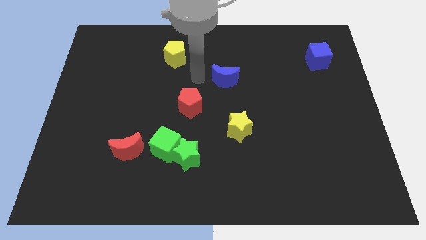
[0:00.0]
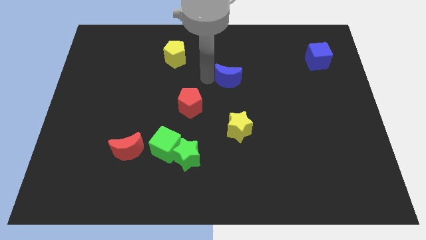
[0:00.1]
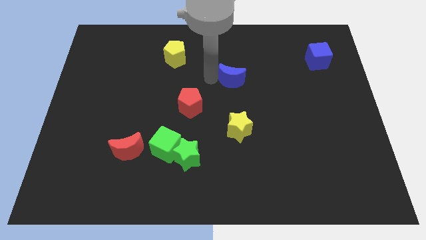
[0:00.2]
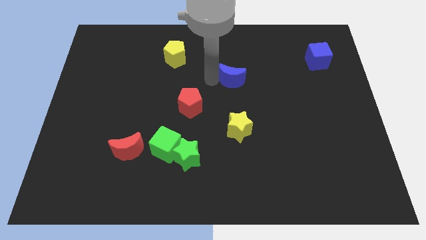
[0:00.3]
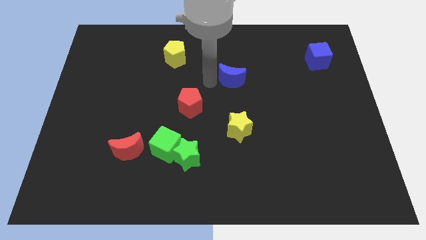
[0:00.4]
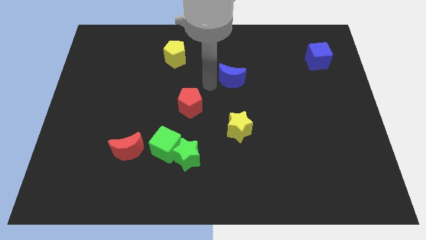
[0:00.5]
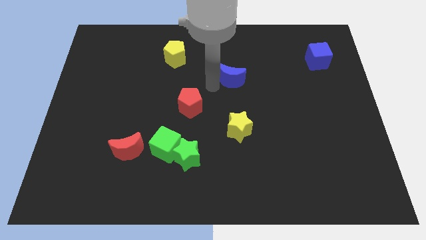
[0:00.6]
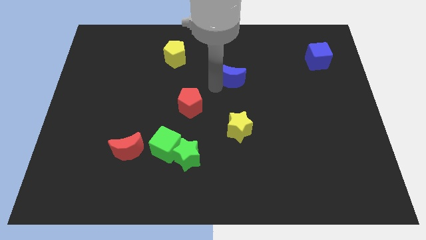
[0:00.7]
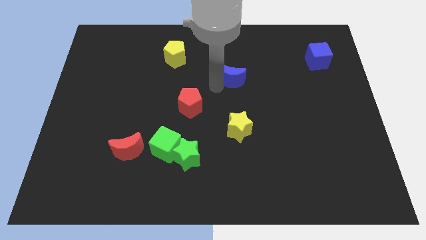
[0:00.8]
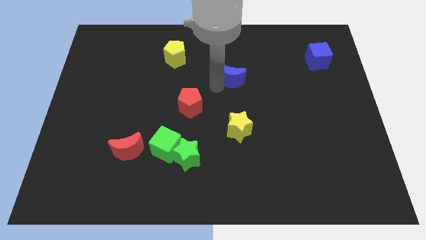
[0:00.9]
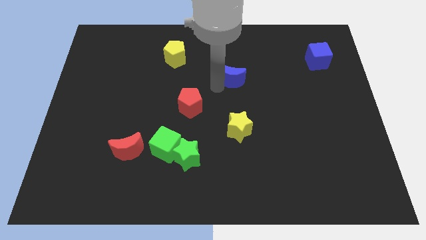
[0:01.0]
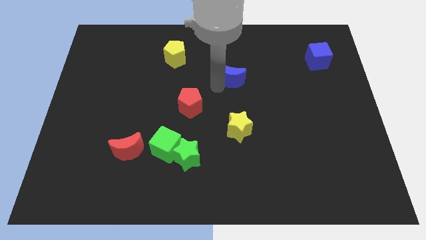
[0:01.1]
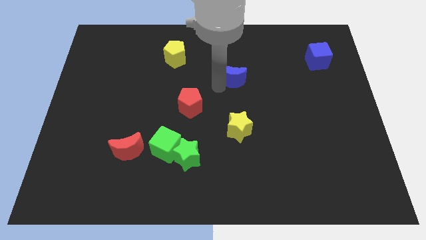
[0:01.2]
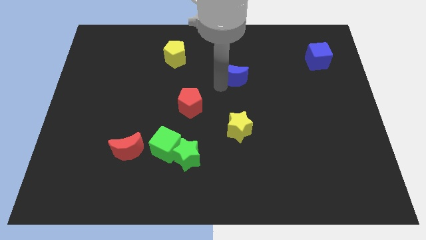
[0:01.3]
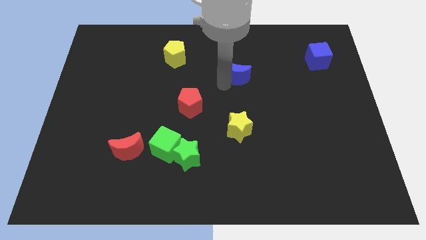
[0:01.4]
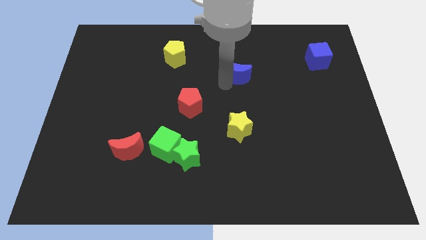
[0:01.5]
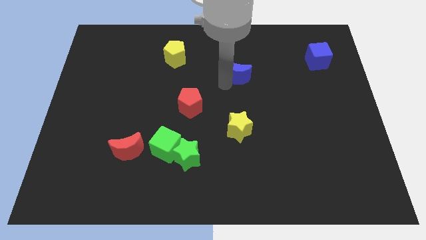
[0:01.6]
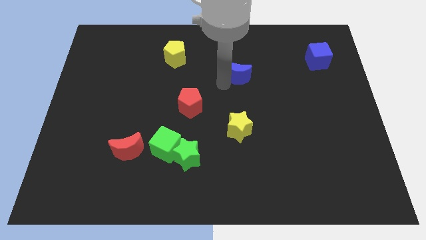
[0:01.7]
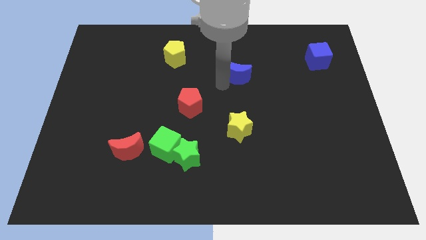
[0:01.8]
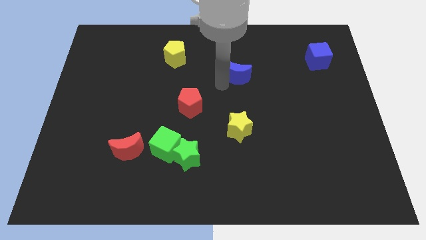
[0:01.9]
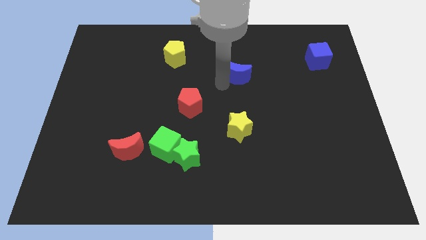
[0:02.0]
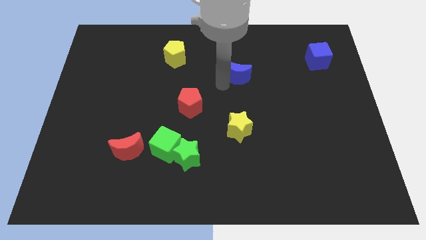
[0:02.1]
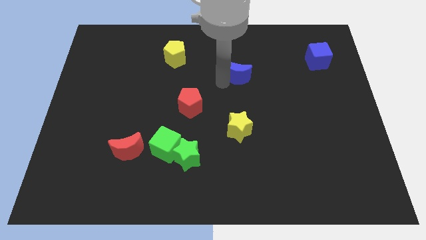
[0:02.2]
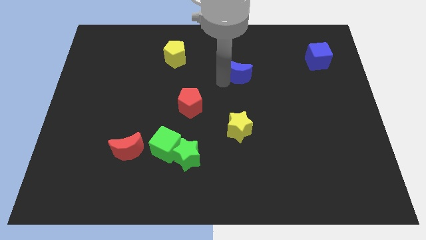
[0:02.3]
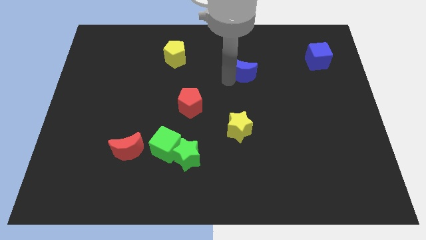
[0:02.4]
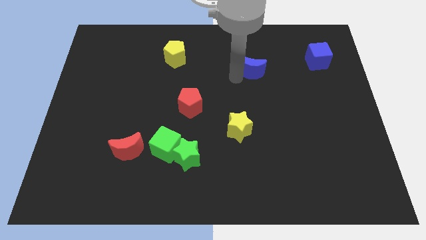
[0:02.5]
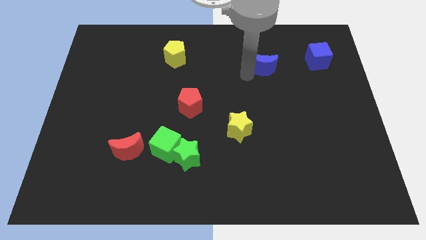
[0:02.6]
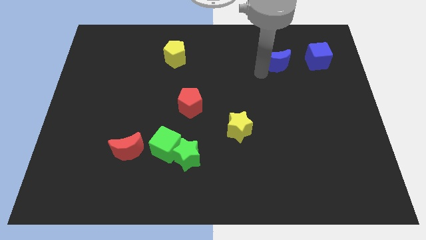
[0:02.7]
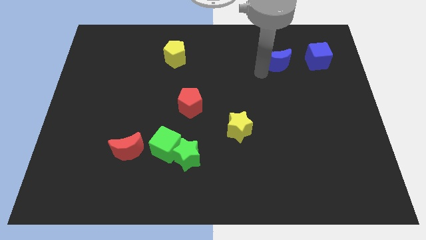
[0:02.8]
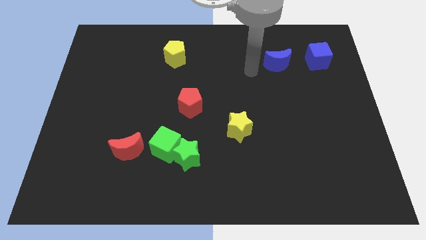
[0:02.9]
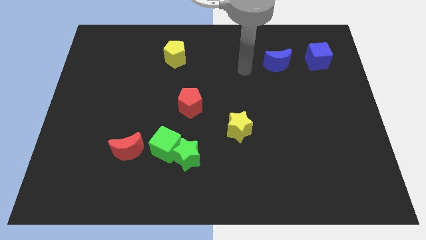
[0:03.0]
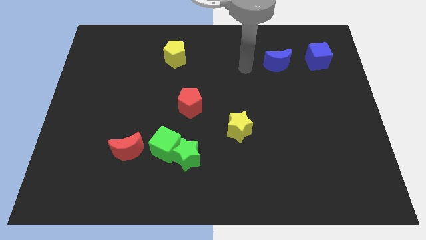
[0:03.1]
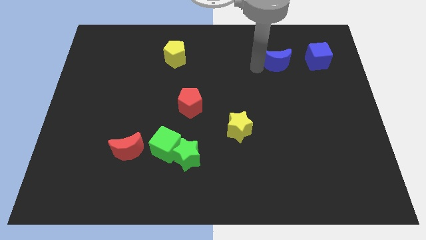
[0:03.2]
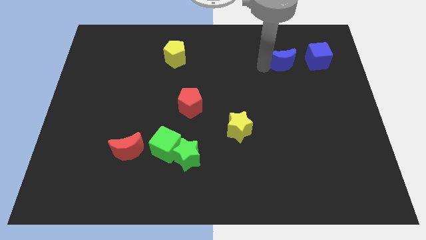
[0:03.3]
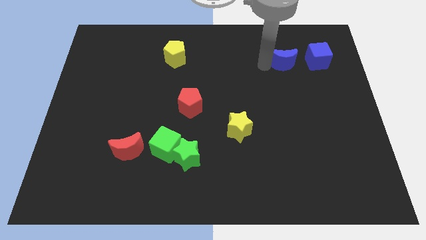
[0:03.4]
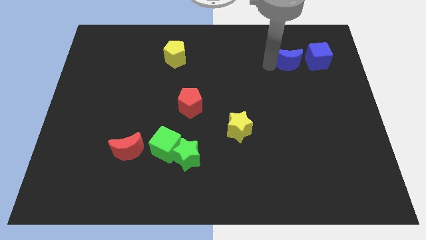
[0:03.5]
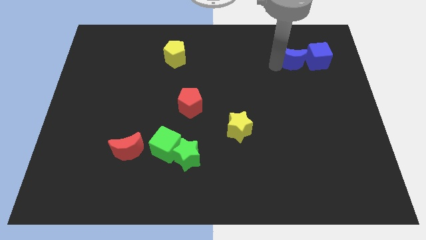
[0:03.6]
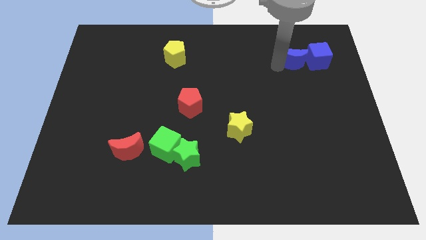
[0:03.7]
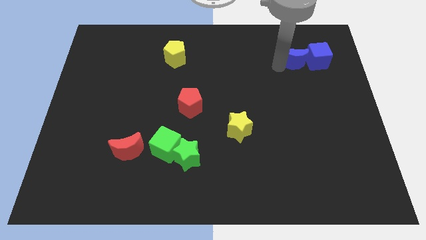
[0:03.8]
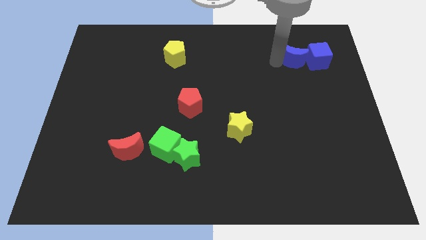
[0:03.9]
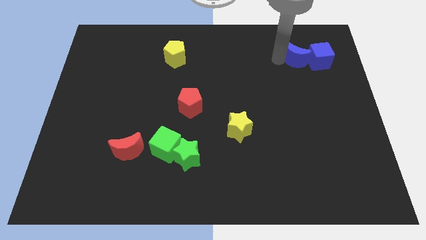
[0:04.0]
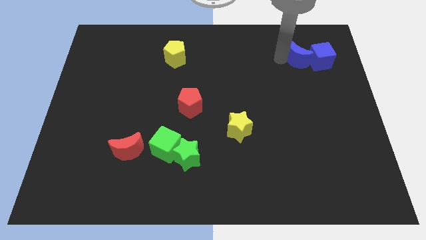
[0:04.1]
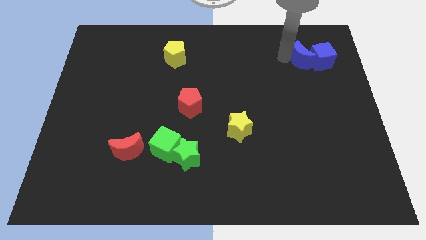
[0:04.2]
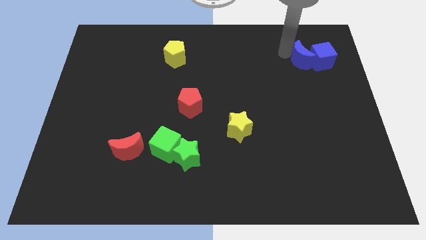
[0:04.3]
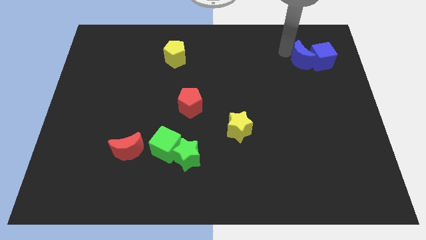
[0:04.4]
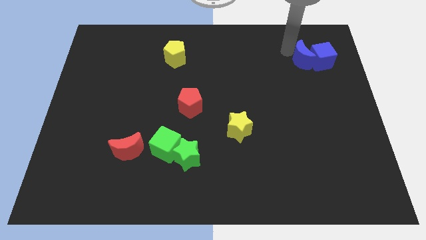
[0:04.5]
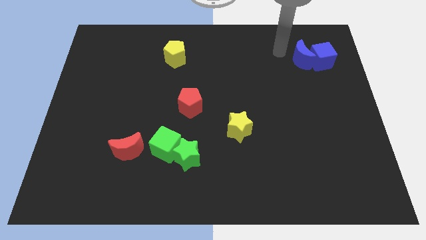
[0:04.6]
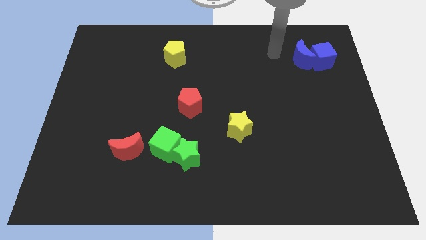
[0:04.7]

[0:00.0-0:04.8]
move blue crescent into the blue cube

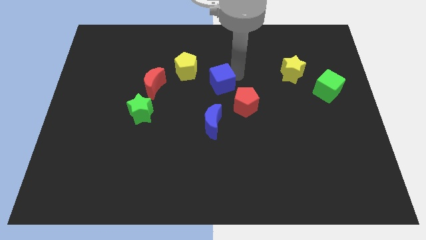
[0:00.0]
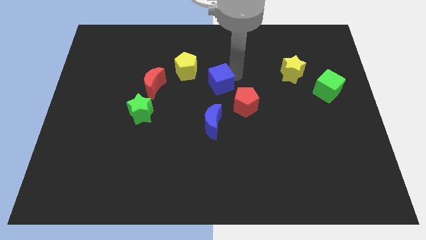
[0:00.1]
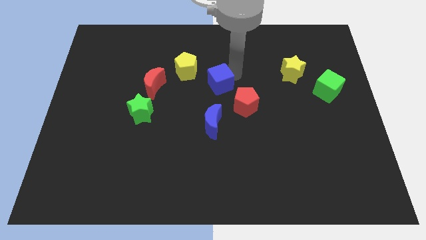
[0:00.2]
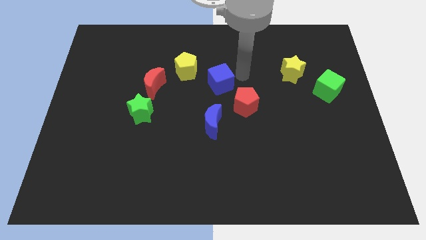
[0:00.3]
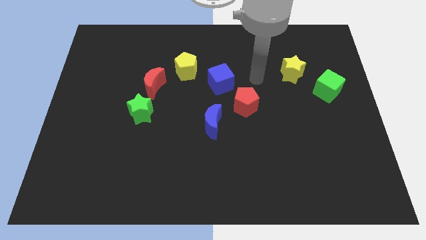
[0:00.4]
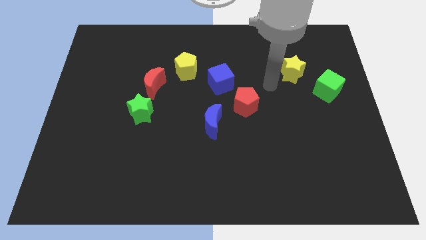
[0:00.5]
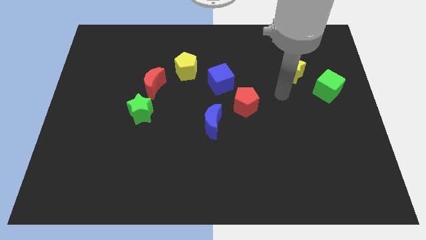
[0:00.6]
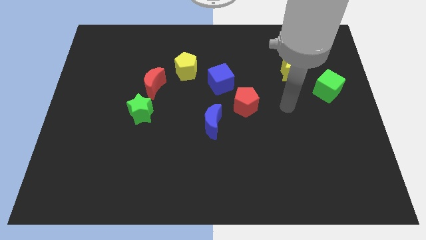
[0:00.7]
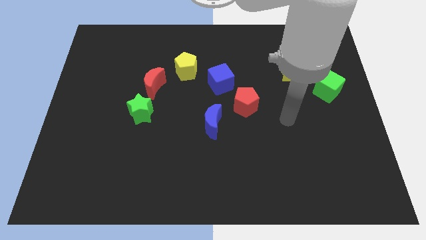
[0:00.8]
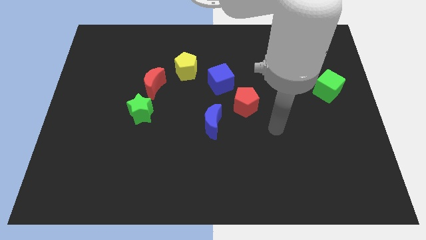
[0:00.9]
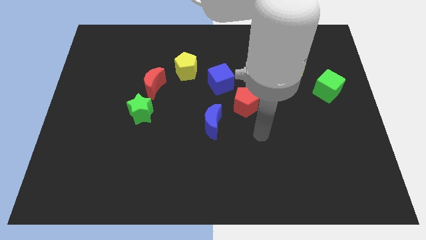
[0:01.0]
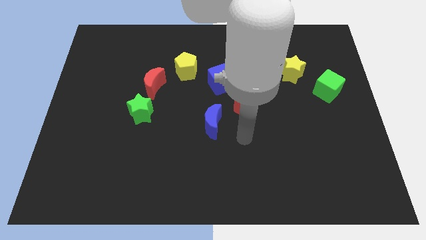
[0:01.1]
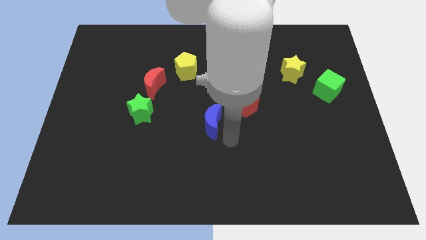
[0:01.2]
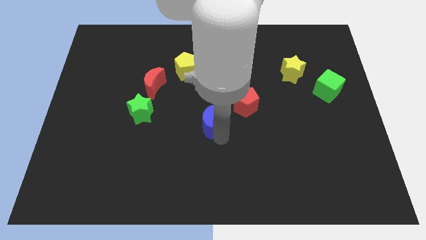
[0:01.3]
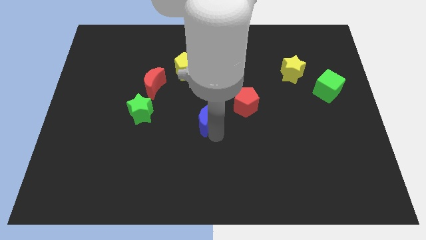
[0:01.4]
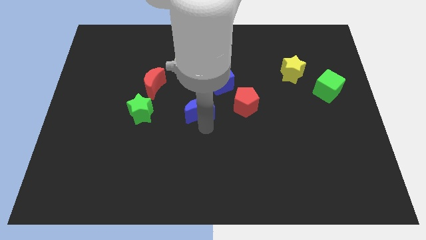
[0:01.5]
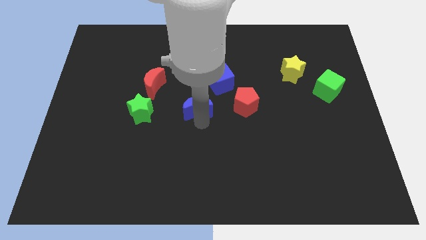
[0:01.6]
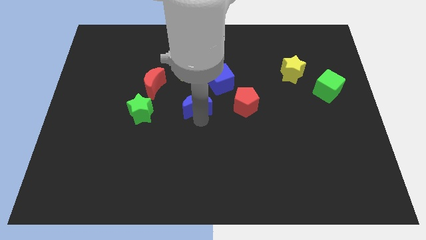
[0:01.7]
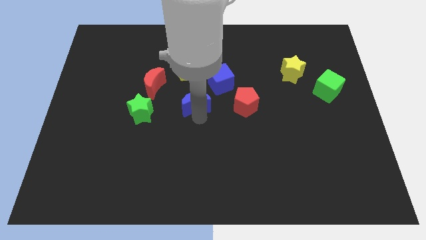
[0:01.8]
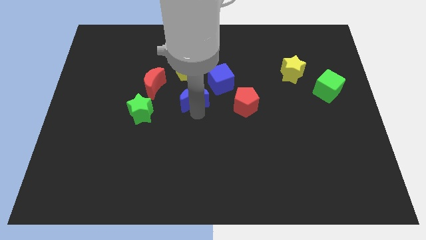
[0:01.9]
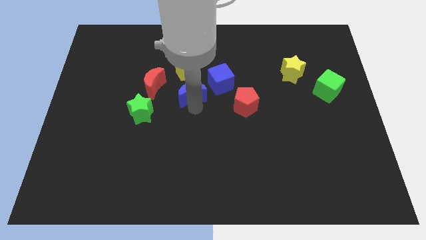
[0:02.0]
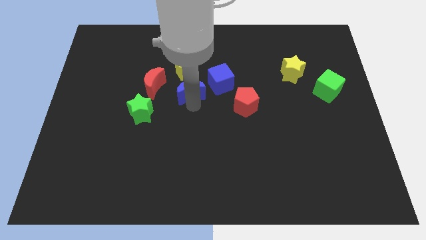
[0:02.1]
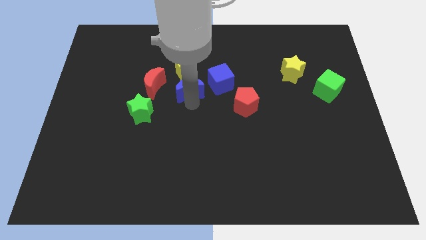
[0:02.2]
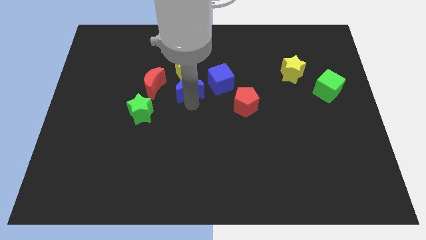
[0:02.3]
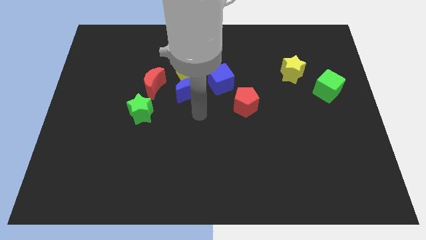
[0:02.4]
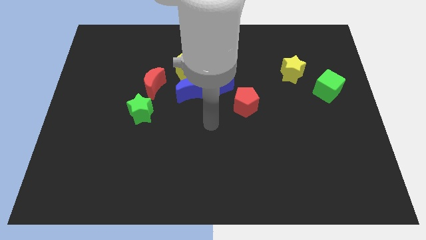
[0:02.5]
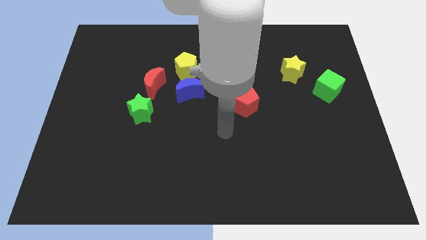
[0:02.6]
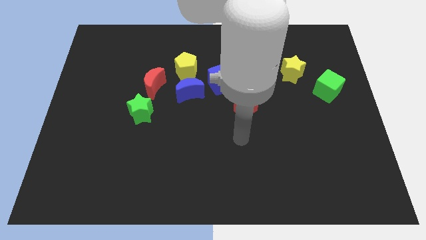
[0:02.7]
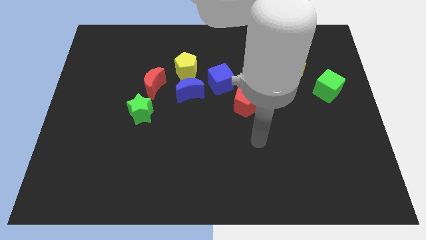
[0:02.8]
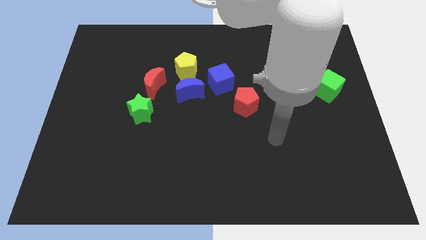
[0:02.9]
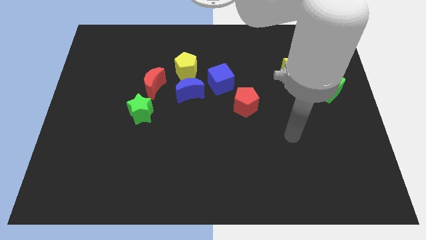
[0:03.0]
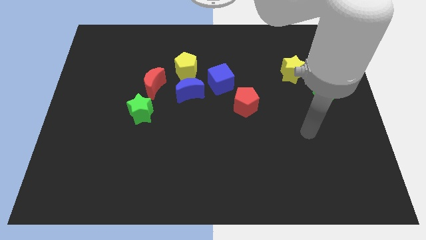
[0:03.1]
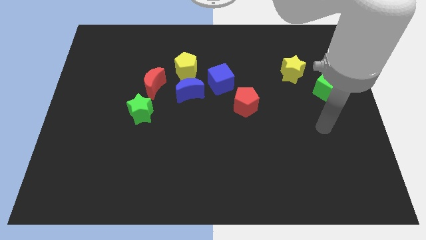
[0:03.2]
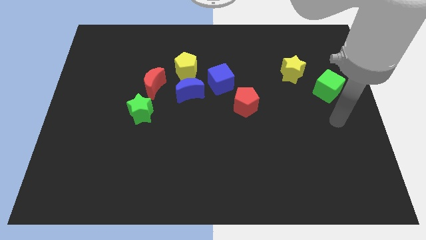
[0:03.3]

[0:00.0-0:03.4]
place the blue moon in between the green star and blue cube

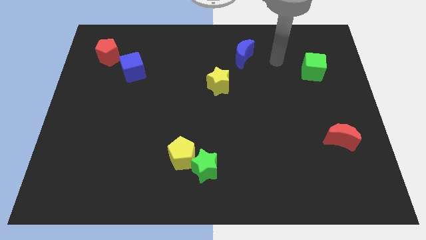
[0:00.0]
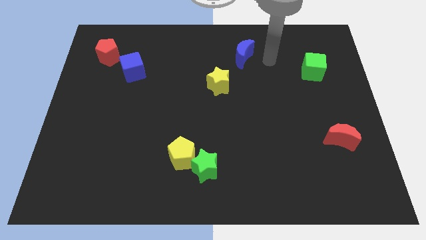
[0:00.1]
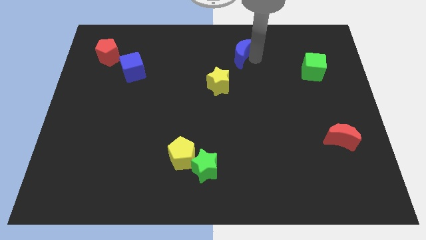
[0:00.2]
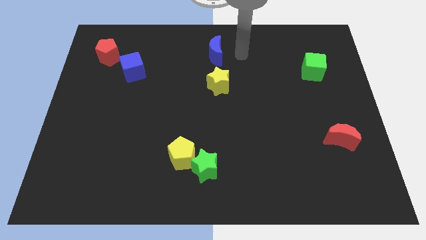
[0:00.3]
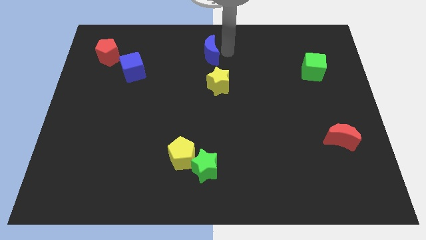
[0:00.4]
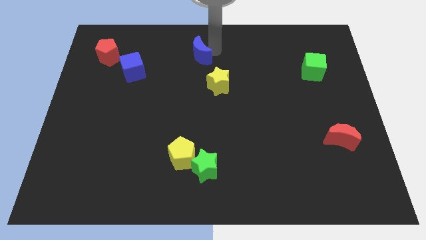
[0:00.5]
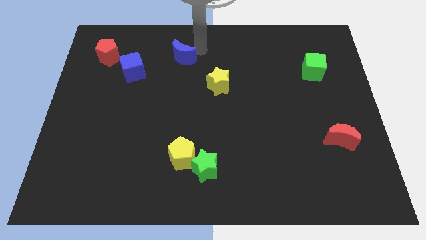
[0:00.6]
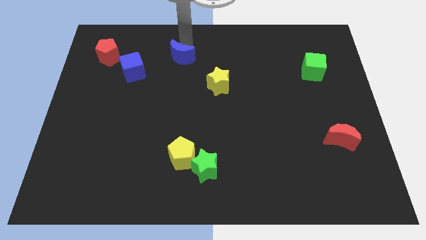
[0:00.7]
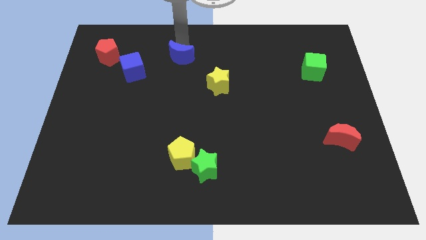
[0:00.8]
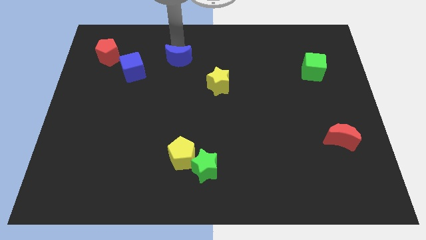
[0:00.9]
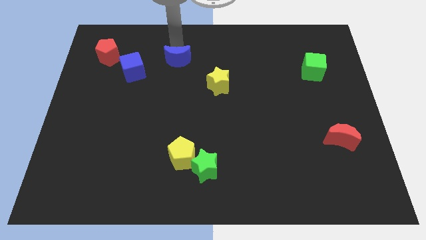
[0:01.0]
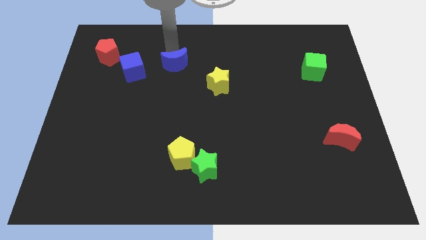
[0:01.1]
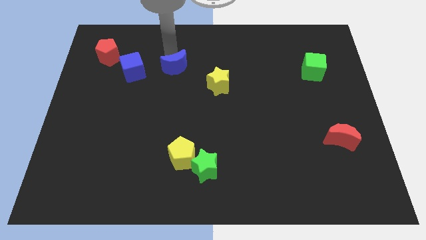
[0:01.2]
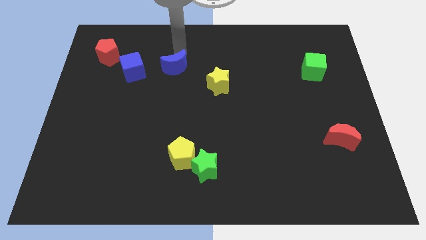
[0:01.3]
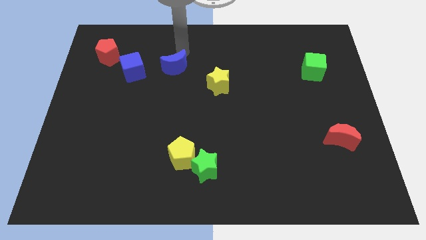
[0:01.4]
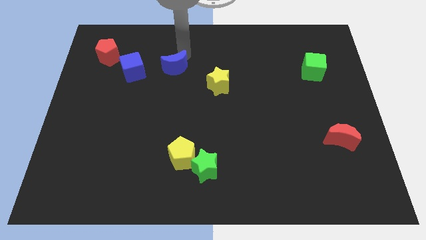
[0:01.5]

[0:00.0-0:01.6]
move the blue moon to the right side of the blue cube
